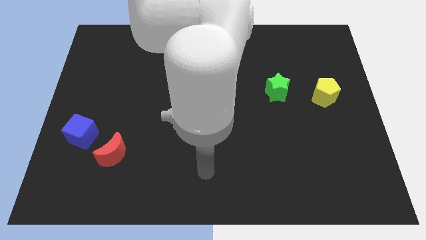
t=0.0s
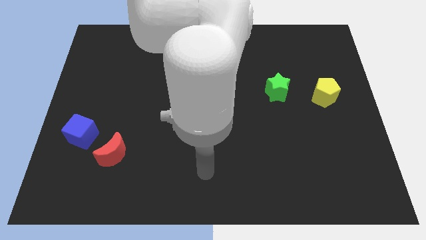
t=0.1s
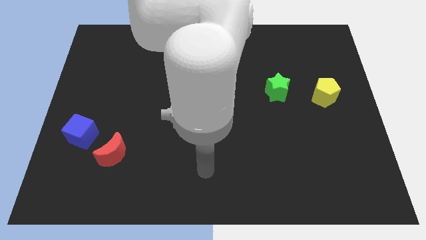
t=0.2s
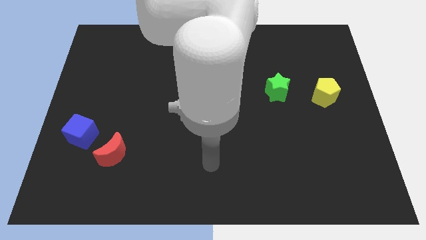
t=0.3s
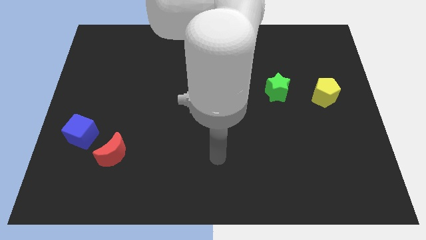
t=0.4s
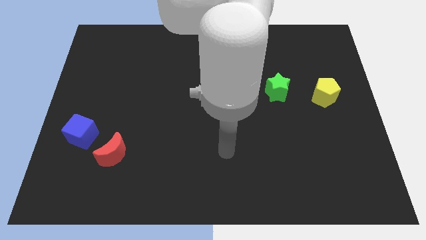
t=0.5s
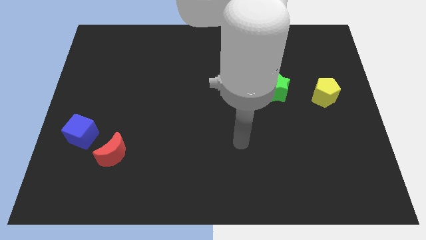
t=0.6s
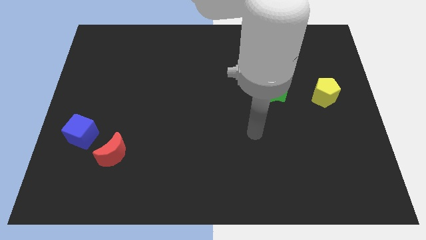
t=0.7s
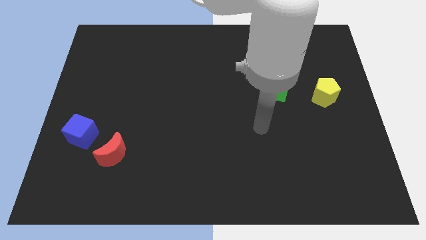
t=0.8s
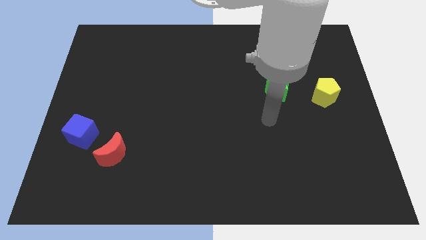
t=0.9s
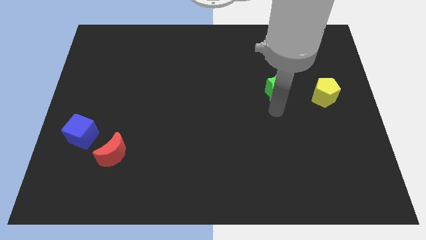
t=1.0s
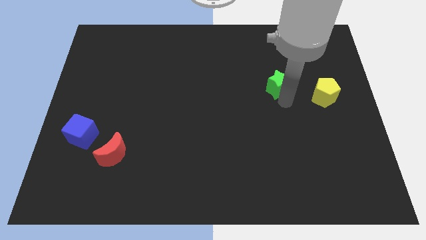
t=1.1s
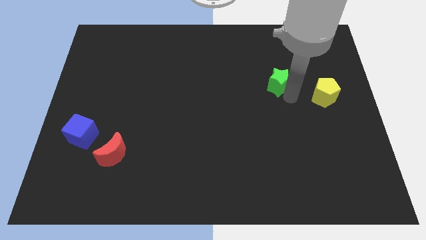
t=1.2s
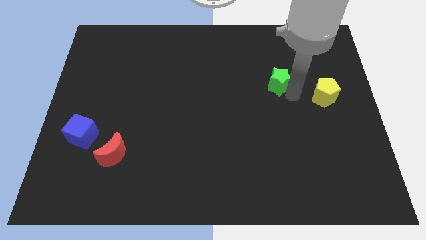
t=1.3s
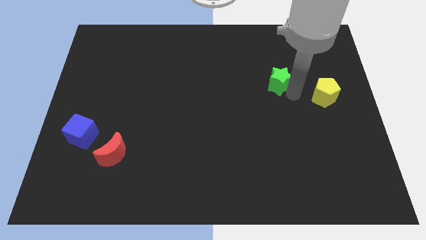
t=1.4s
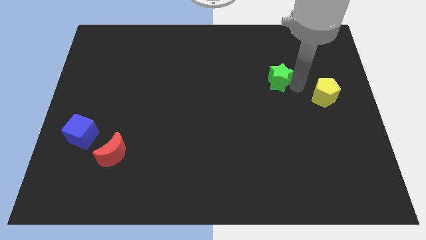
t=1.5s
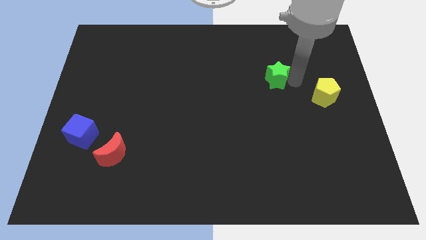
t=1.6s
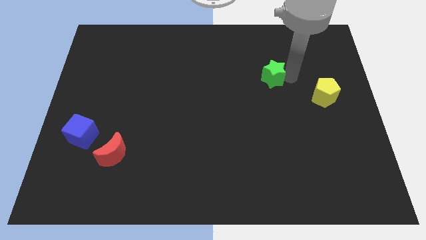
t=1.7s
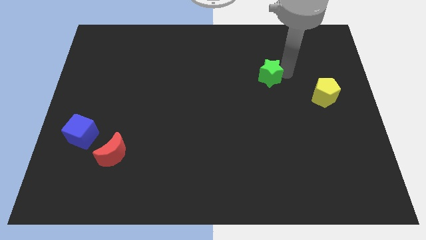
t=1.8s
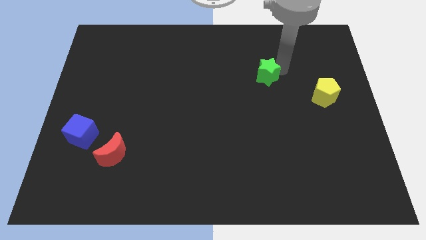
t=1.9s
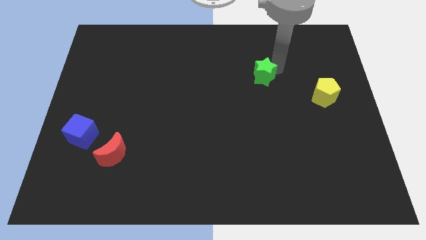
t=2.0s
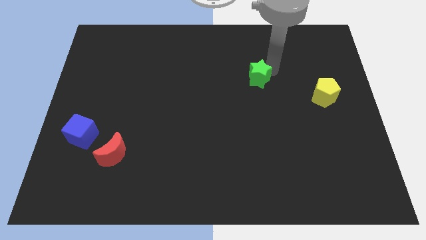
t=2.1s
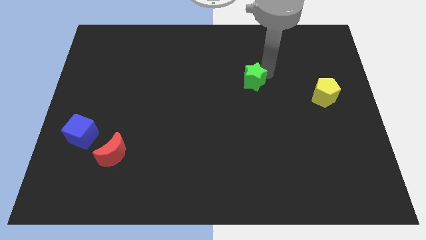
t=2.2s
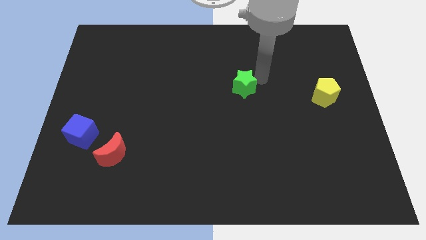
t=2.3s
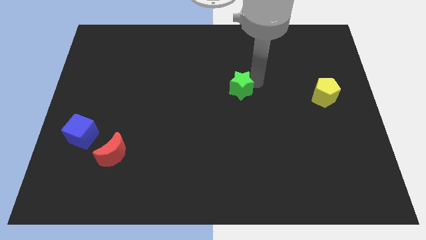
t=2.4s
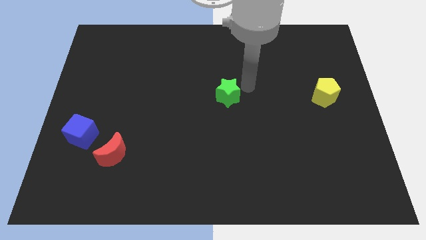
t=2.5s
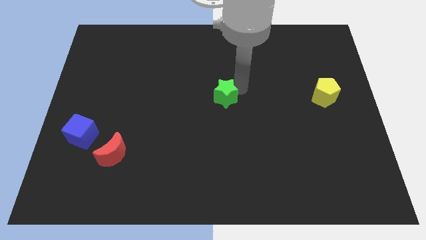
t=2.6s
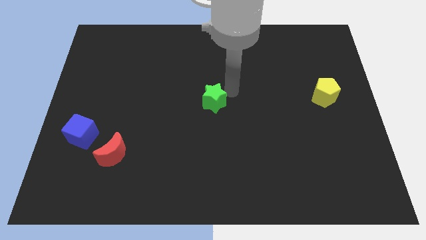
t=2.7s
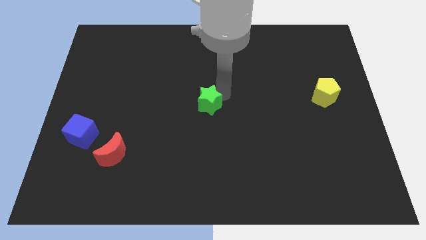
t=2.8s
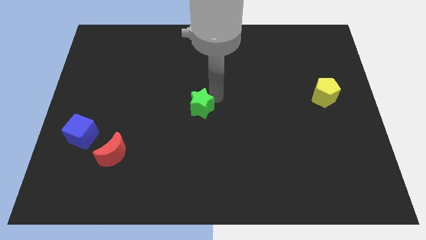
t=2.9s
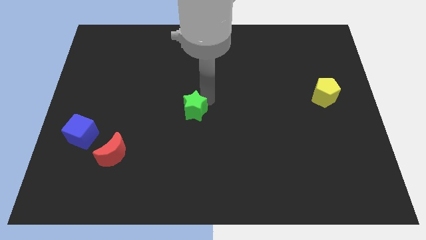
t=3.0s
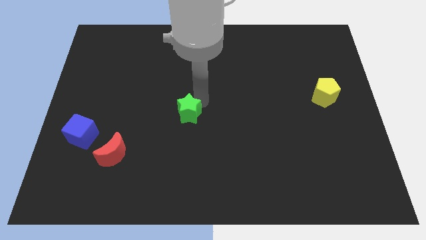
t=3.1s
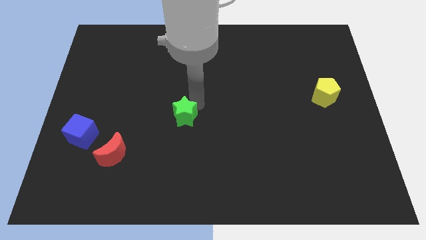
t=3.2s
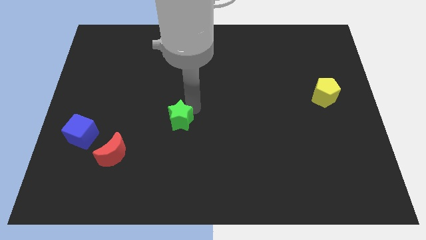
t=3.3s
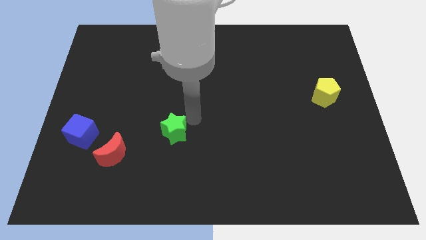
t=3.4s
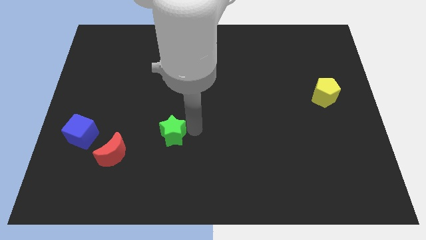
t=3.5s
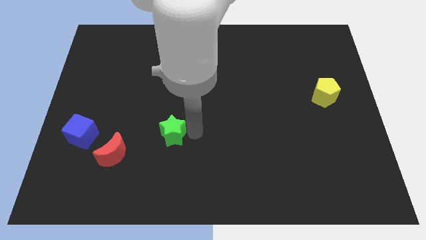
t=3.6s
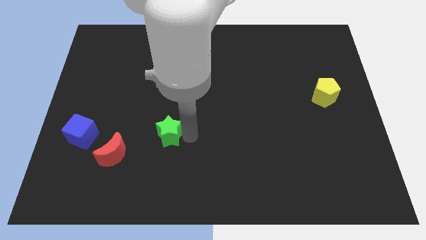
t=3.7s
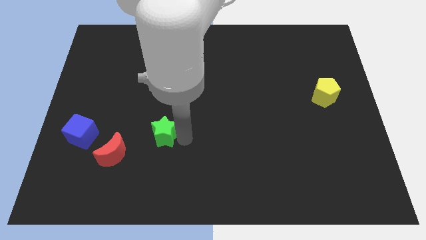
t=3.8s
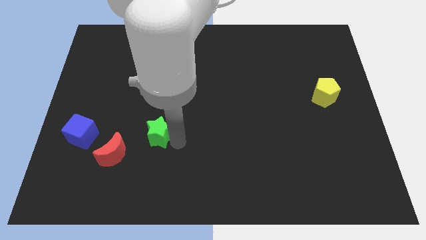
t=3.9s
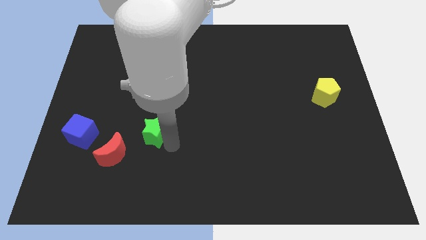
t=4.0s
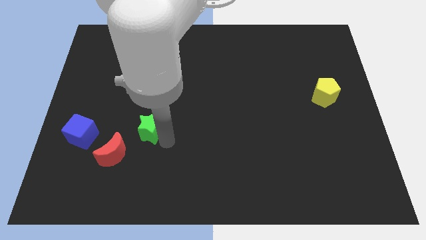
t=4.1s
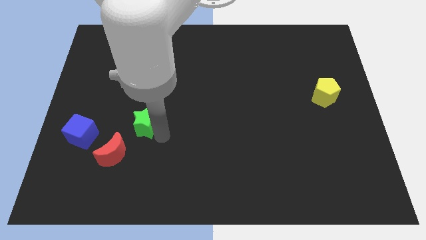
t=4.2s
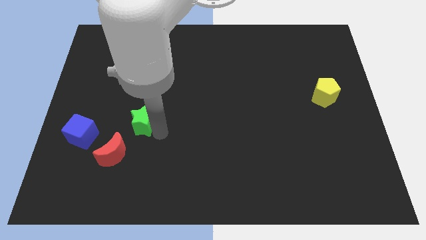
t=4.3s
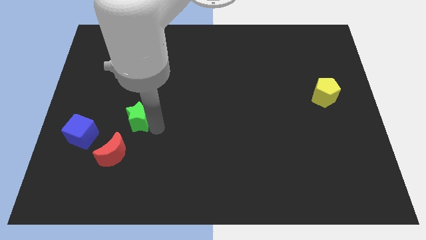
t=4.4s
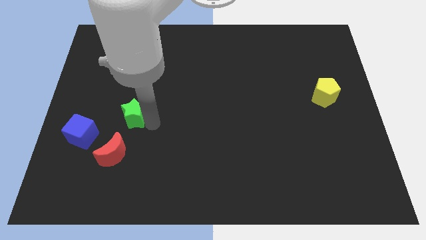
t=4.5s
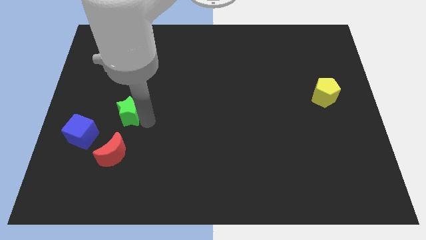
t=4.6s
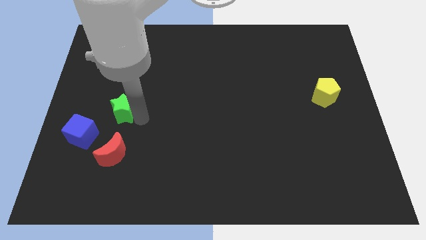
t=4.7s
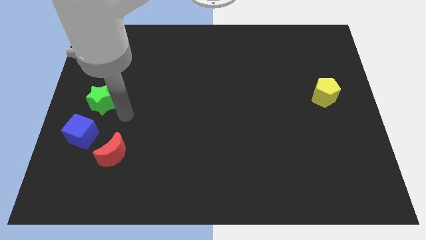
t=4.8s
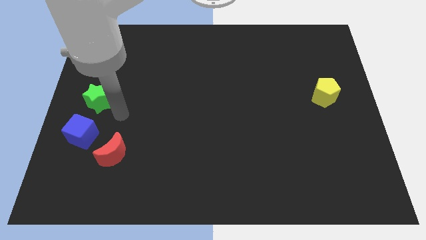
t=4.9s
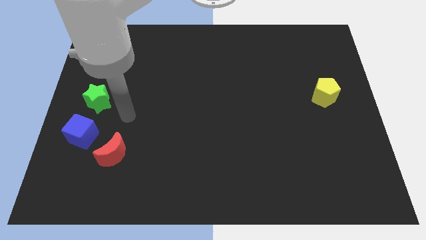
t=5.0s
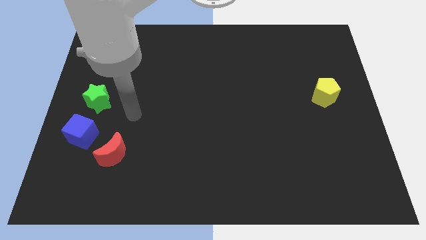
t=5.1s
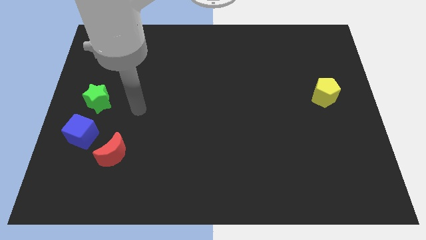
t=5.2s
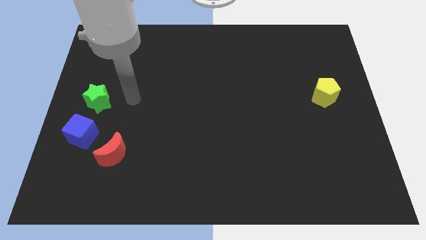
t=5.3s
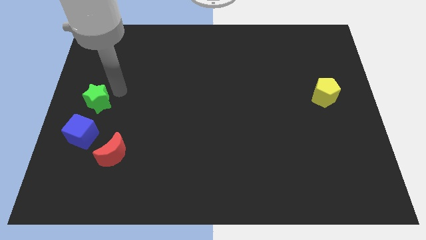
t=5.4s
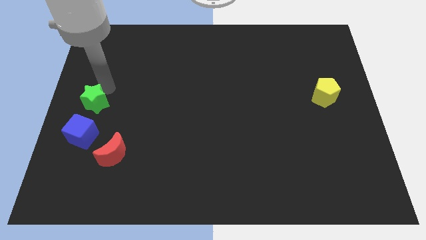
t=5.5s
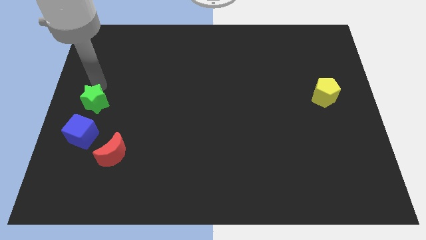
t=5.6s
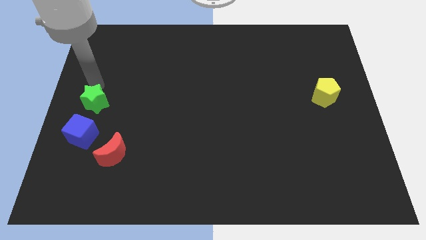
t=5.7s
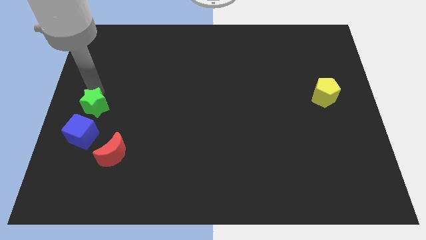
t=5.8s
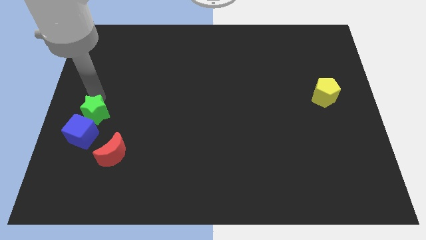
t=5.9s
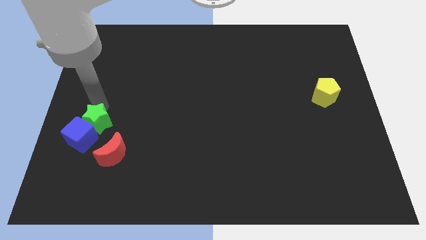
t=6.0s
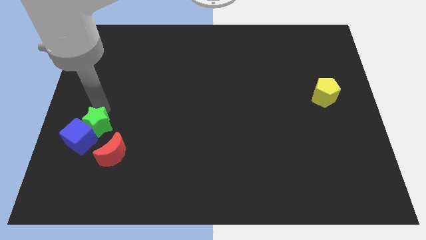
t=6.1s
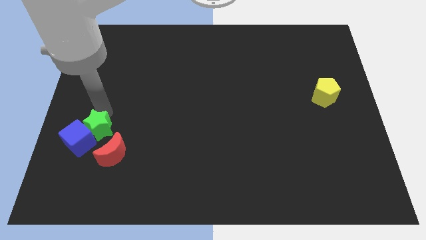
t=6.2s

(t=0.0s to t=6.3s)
put the green block towards the blue cube

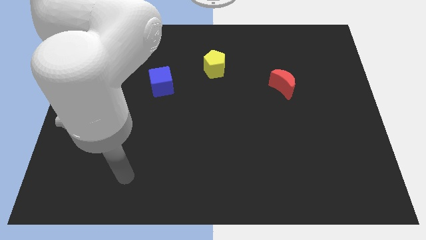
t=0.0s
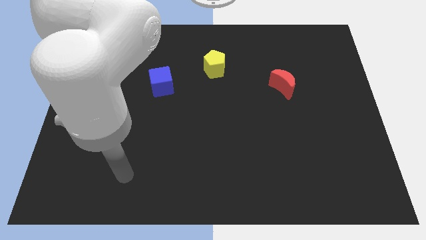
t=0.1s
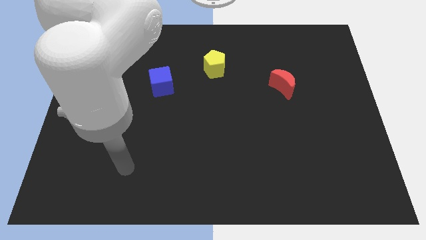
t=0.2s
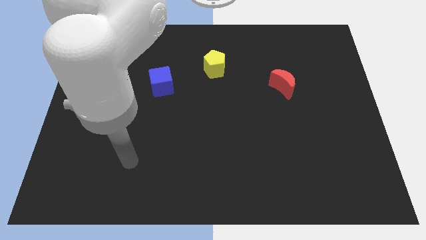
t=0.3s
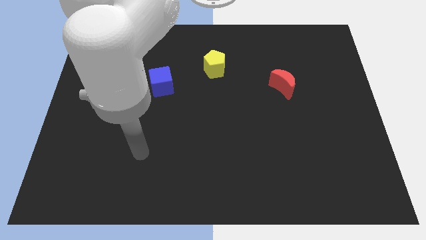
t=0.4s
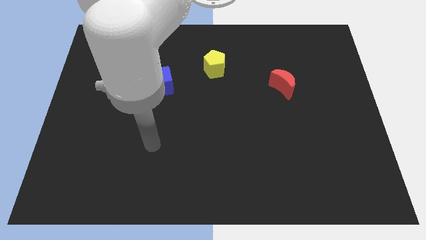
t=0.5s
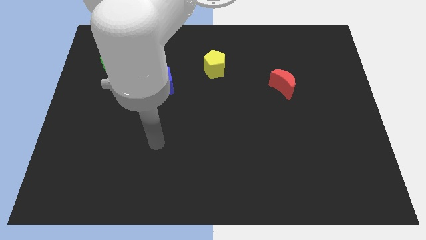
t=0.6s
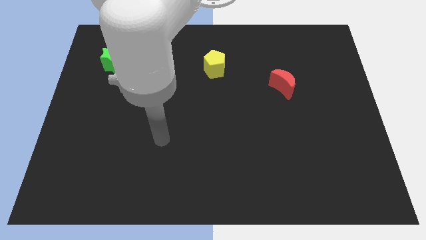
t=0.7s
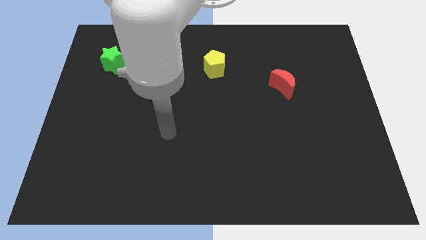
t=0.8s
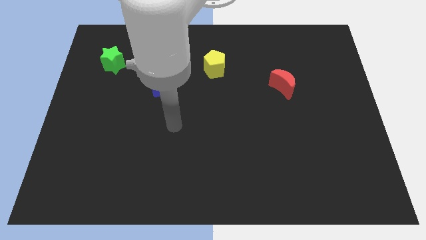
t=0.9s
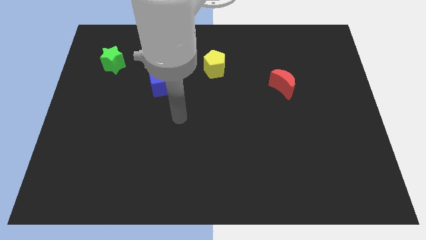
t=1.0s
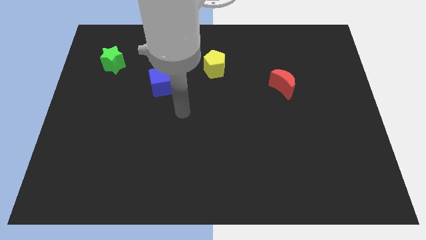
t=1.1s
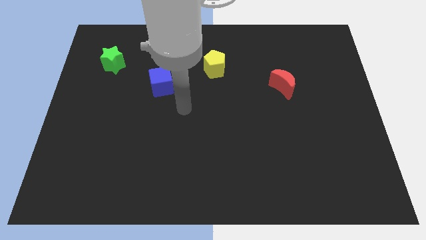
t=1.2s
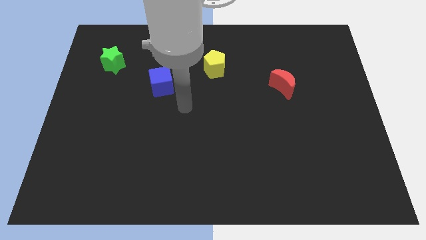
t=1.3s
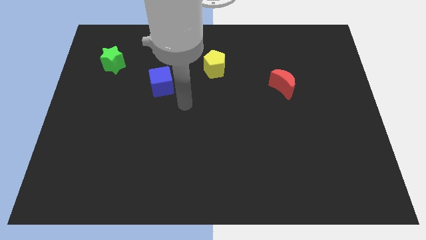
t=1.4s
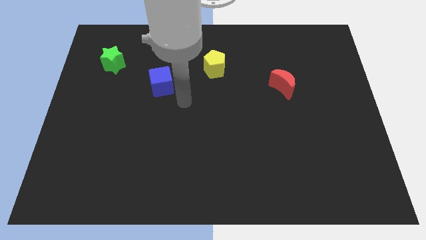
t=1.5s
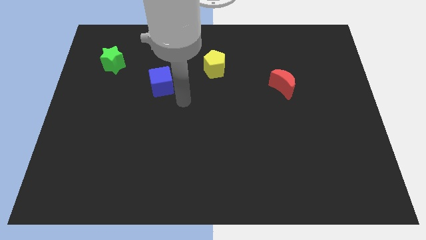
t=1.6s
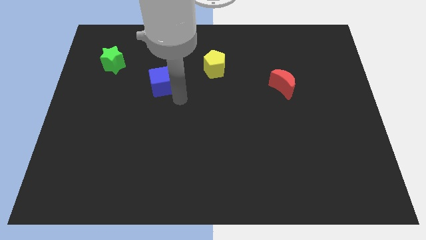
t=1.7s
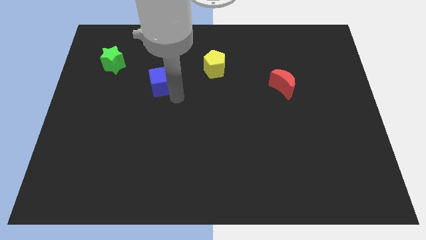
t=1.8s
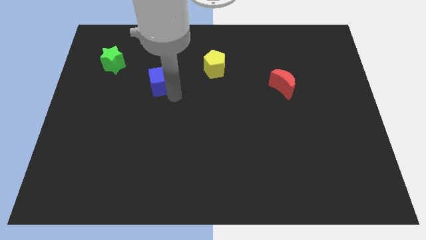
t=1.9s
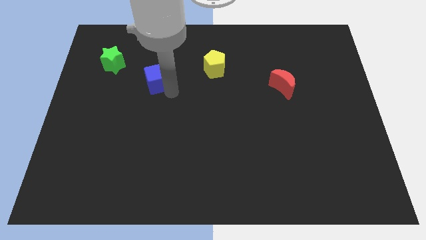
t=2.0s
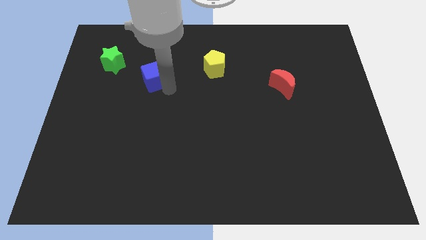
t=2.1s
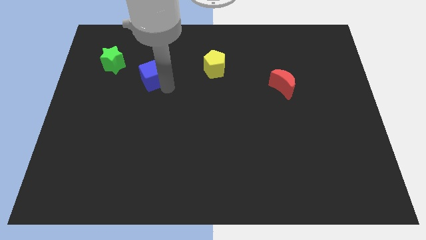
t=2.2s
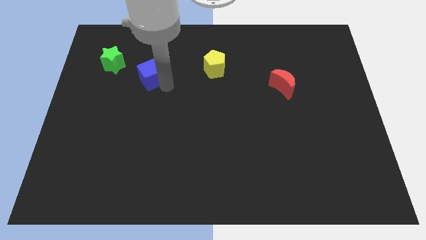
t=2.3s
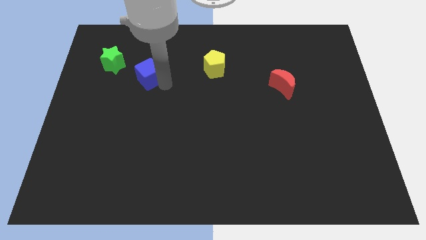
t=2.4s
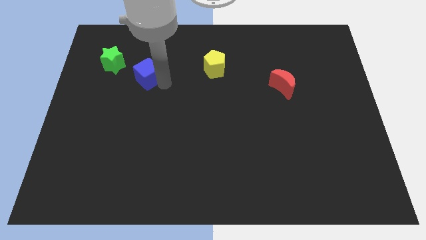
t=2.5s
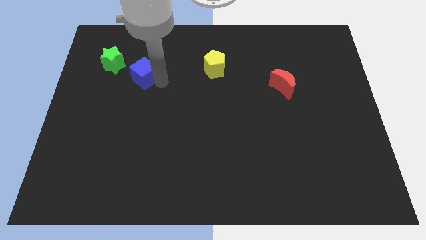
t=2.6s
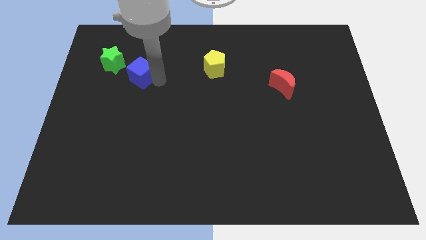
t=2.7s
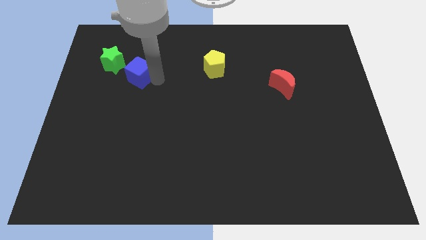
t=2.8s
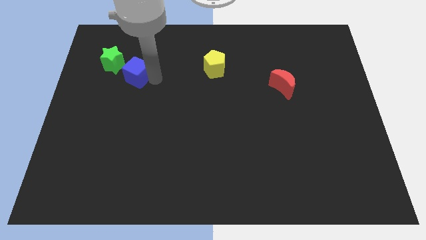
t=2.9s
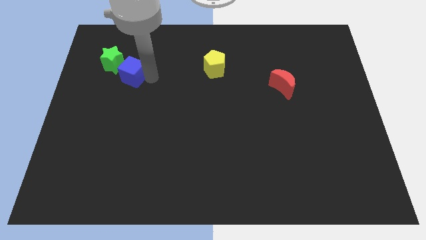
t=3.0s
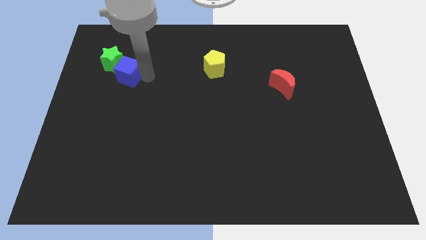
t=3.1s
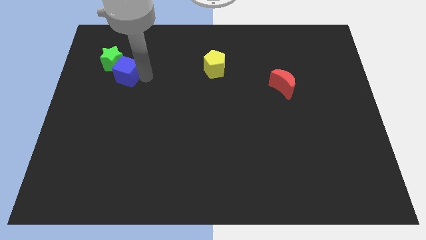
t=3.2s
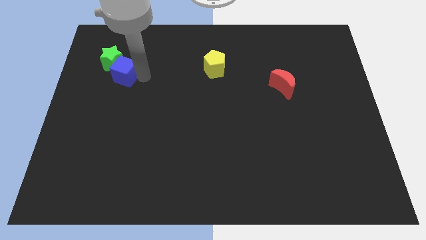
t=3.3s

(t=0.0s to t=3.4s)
put the blue cube to the green block
